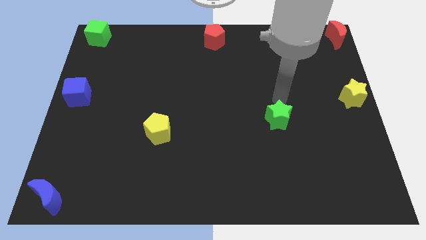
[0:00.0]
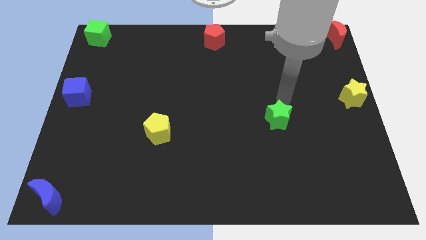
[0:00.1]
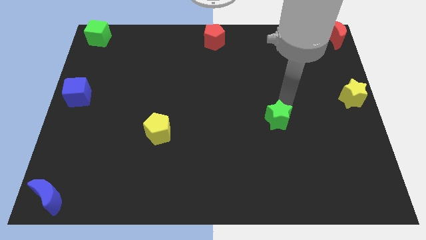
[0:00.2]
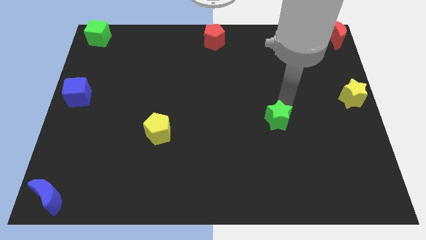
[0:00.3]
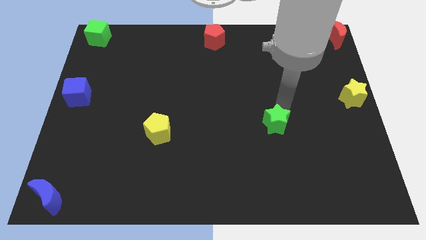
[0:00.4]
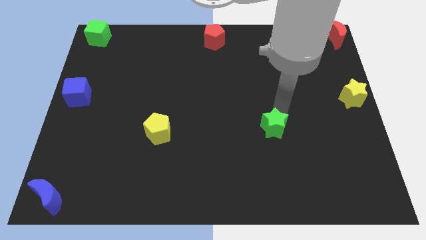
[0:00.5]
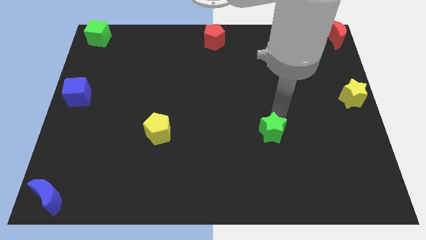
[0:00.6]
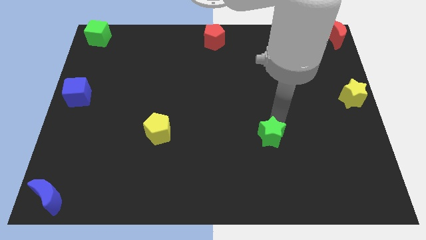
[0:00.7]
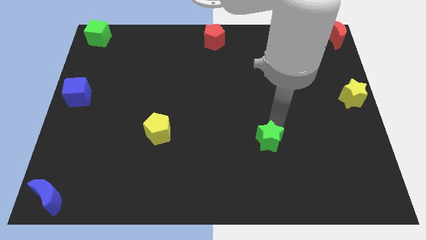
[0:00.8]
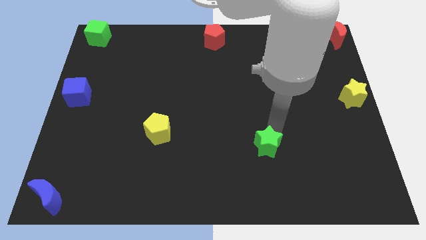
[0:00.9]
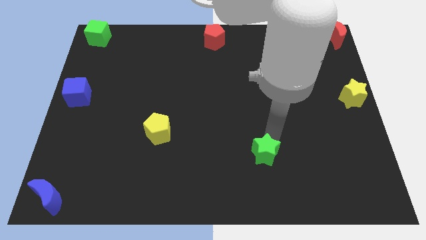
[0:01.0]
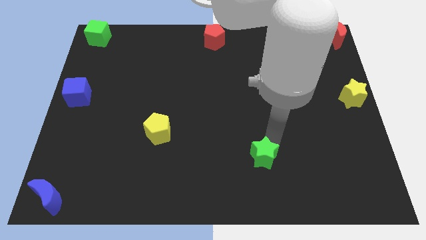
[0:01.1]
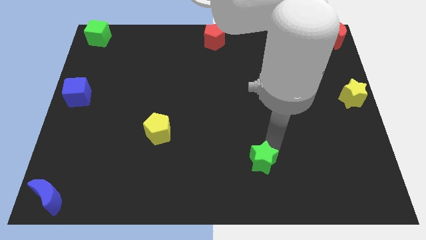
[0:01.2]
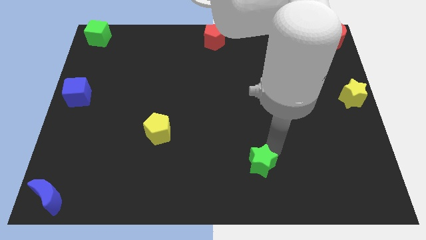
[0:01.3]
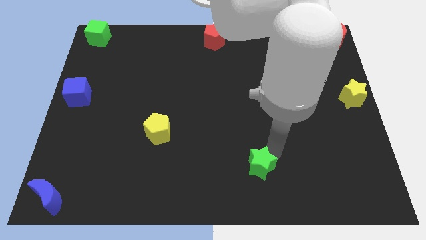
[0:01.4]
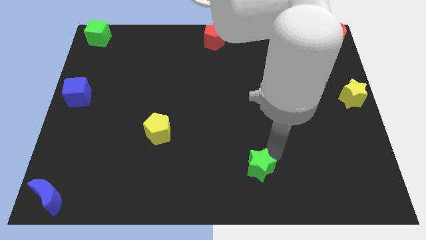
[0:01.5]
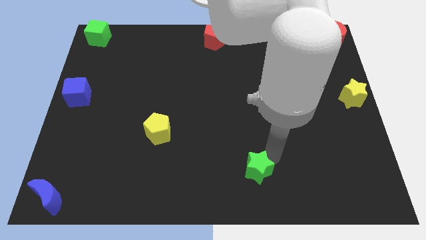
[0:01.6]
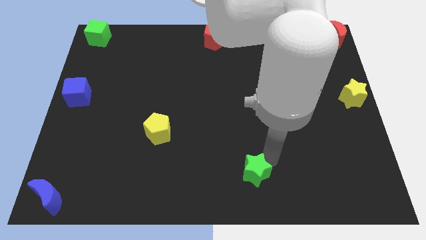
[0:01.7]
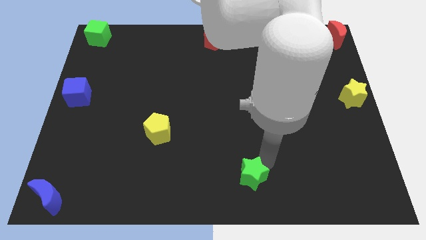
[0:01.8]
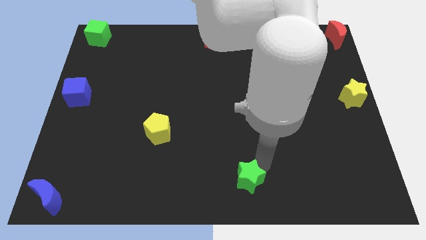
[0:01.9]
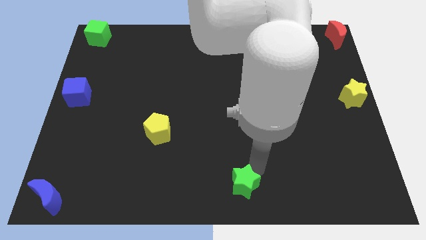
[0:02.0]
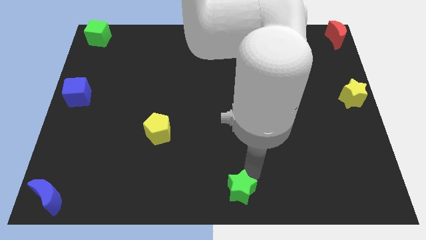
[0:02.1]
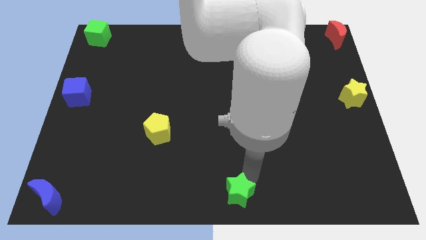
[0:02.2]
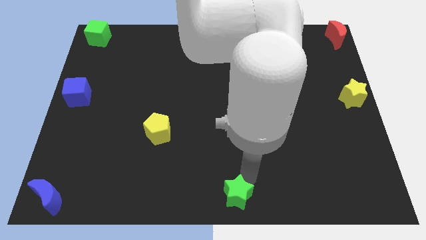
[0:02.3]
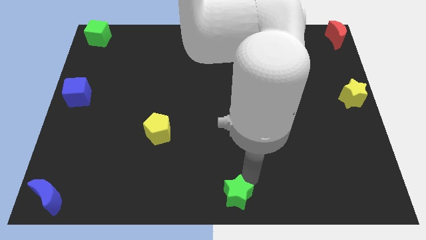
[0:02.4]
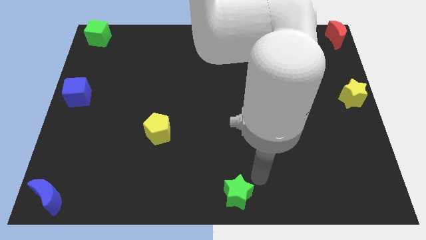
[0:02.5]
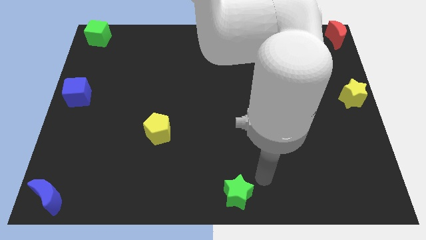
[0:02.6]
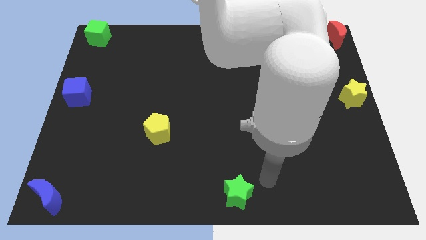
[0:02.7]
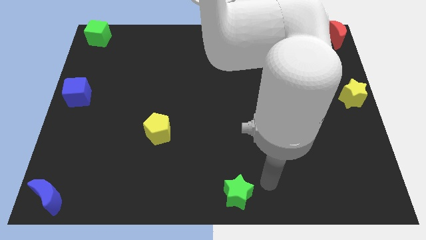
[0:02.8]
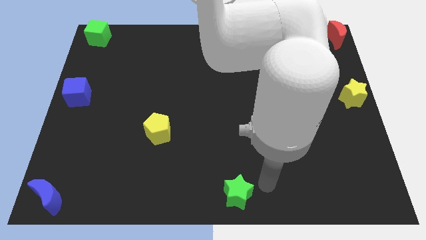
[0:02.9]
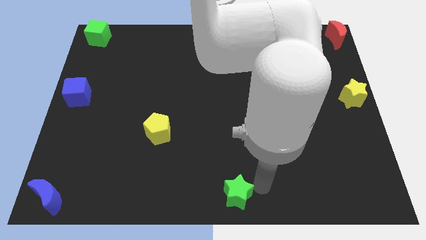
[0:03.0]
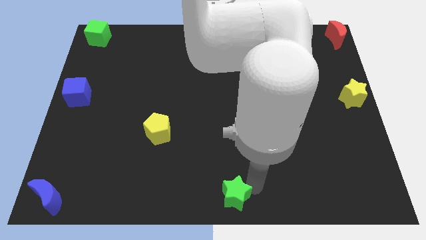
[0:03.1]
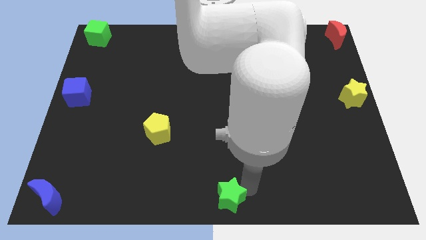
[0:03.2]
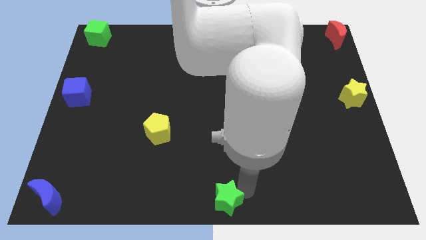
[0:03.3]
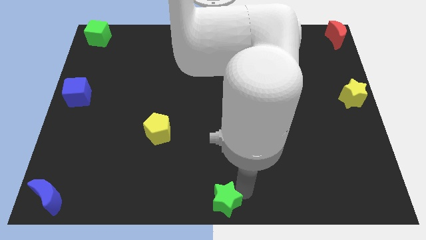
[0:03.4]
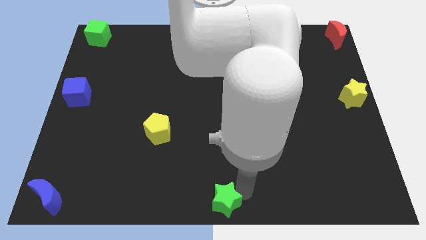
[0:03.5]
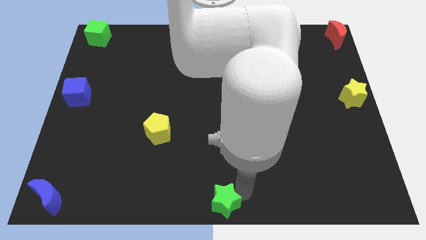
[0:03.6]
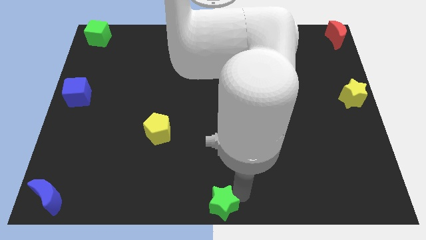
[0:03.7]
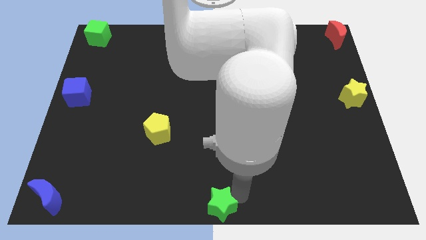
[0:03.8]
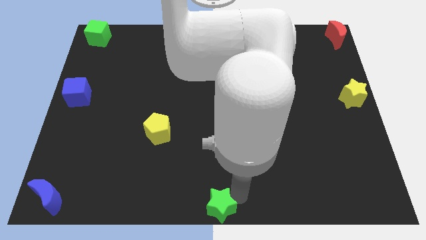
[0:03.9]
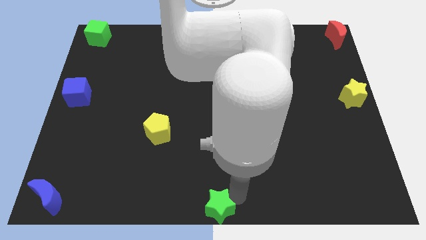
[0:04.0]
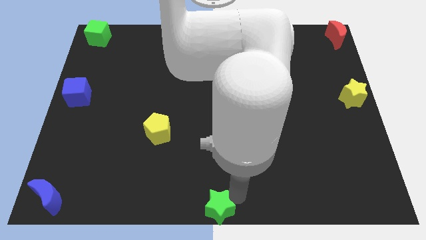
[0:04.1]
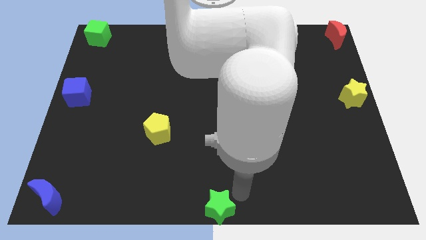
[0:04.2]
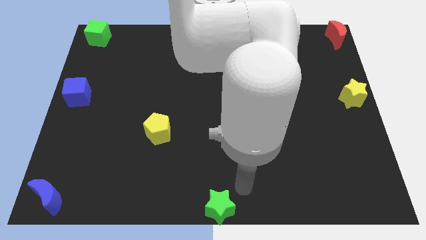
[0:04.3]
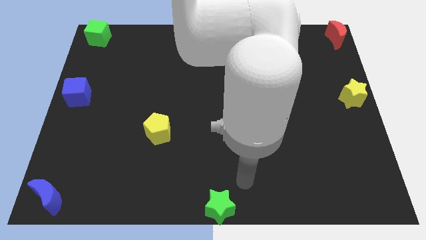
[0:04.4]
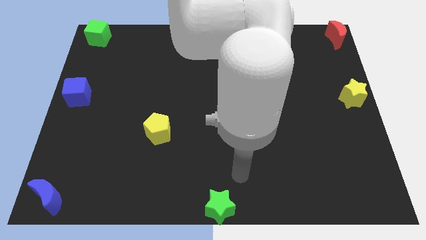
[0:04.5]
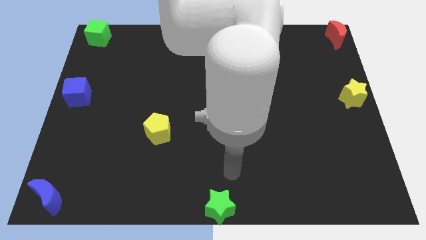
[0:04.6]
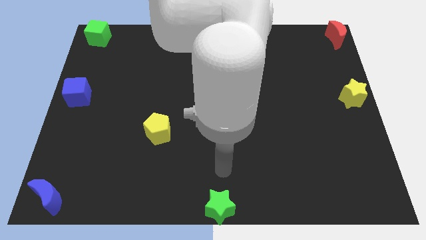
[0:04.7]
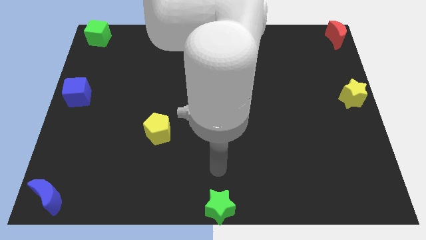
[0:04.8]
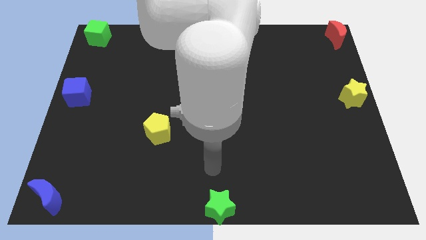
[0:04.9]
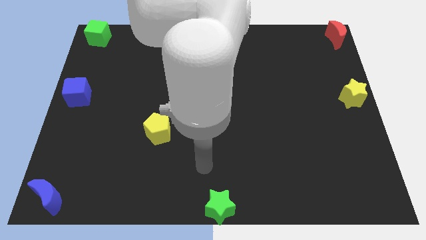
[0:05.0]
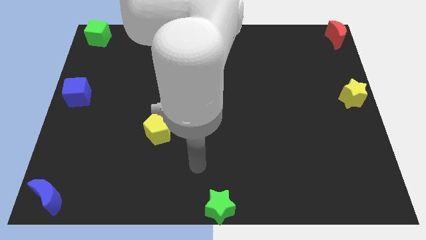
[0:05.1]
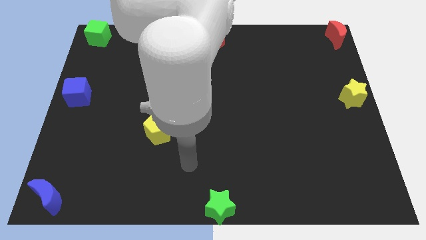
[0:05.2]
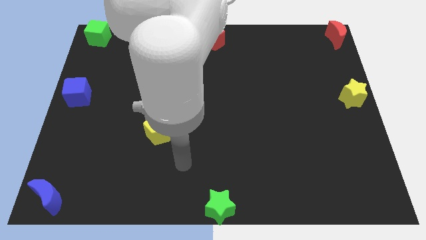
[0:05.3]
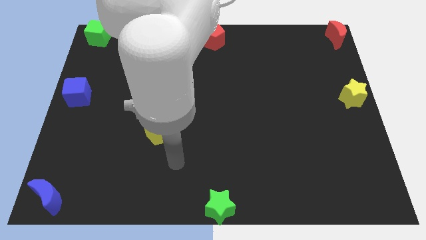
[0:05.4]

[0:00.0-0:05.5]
push the green star to the bottom center of the board

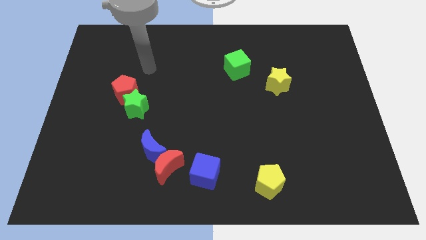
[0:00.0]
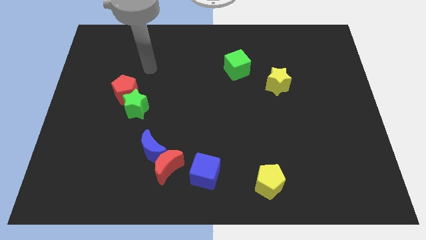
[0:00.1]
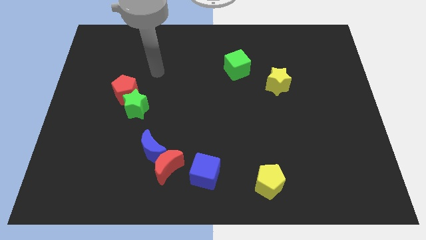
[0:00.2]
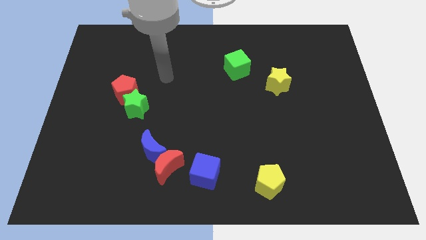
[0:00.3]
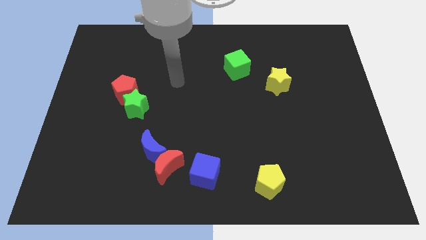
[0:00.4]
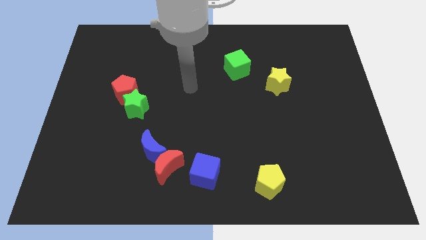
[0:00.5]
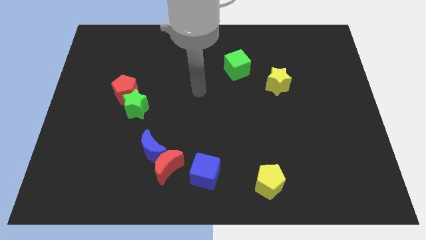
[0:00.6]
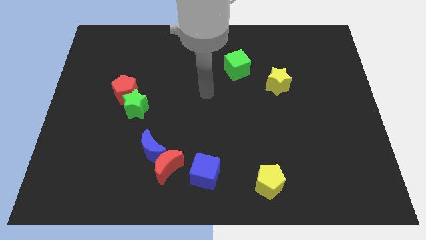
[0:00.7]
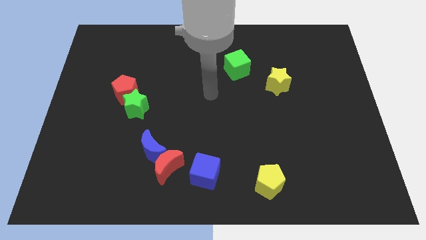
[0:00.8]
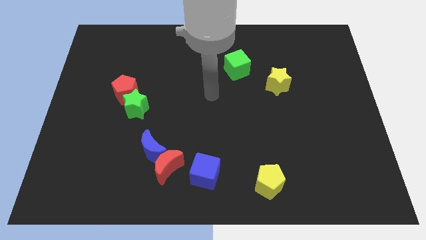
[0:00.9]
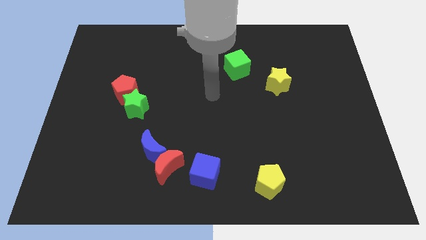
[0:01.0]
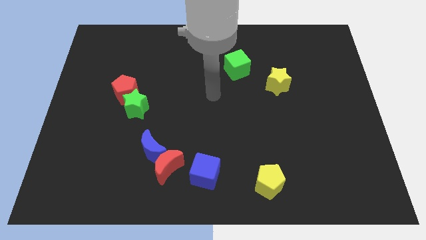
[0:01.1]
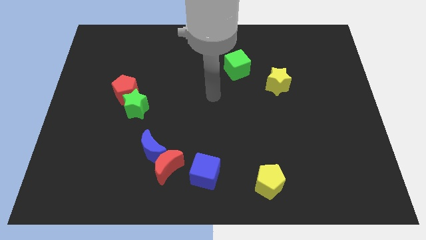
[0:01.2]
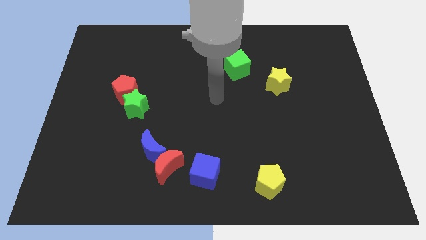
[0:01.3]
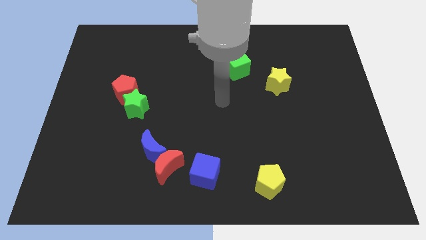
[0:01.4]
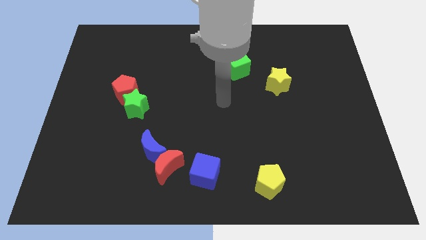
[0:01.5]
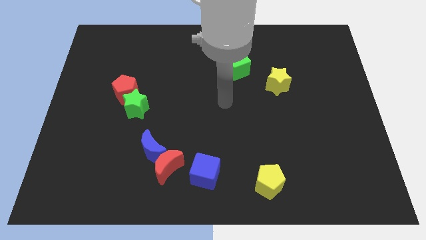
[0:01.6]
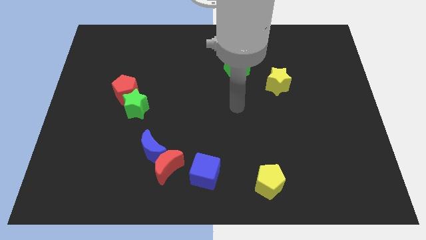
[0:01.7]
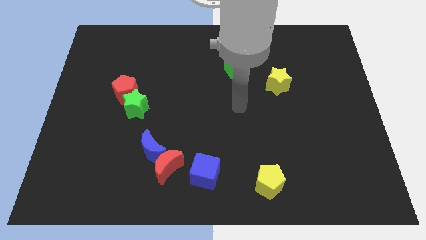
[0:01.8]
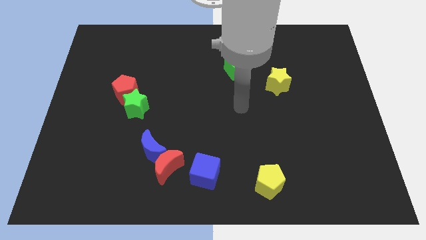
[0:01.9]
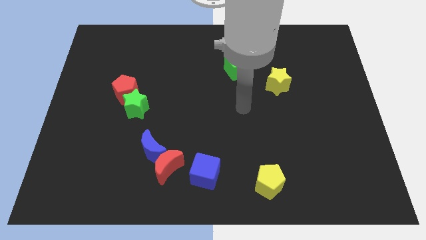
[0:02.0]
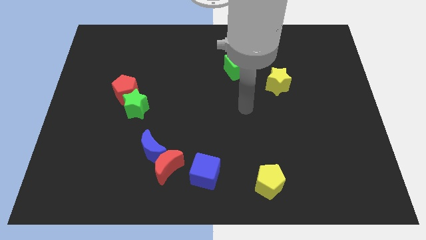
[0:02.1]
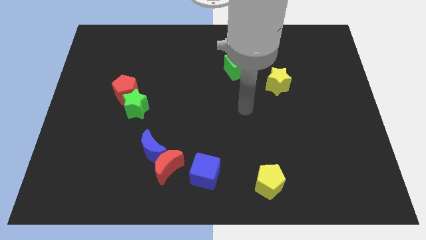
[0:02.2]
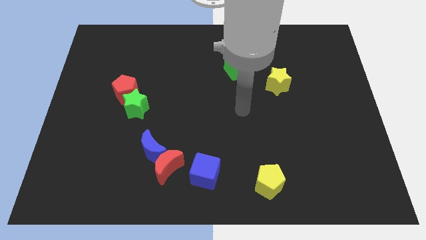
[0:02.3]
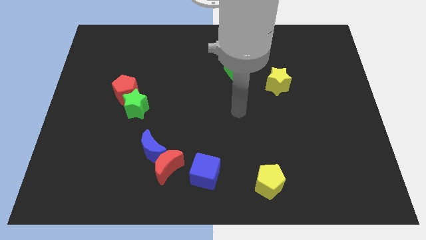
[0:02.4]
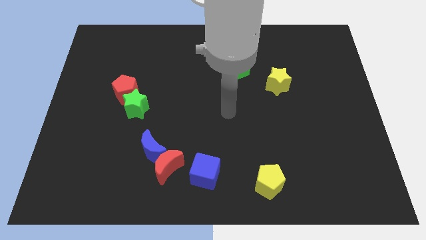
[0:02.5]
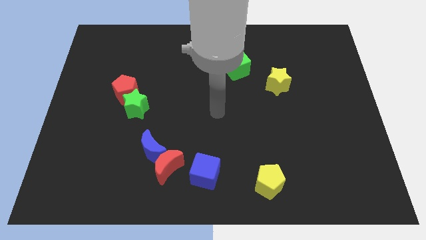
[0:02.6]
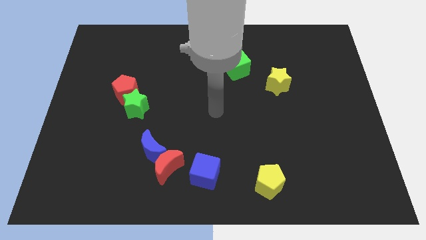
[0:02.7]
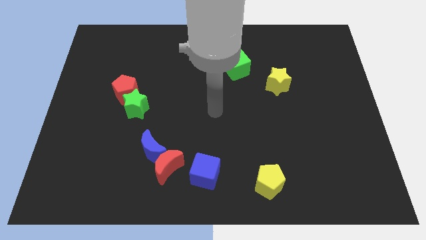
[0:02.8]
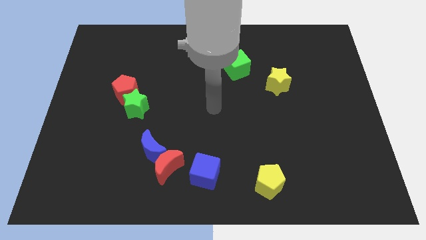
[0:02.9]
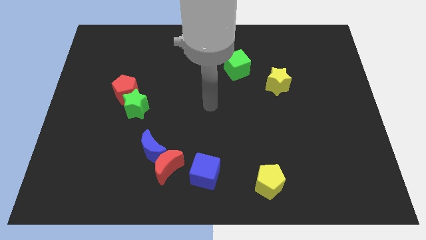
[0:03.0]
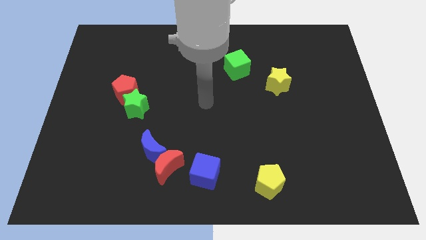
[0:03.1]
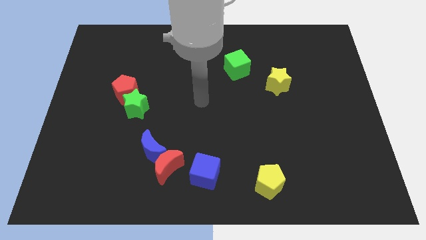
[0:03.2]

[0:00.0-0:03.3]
go and point your arm at the center of the board

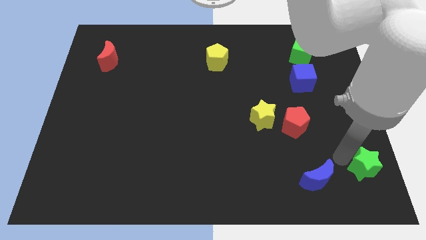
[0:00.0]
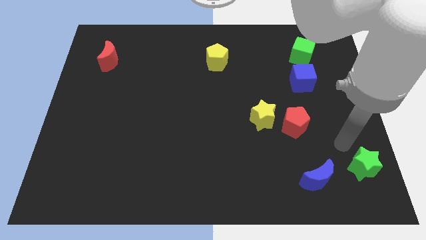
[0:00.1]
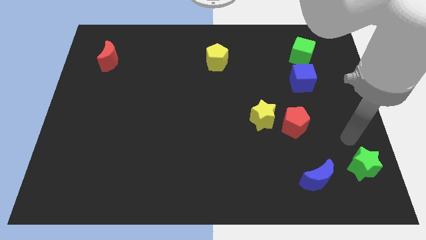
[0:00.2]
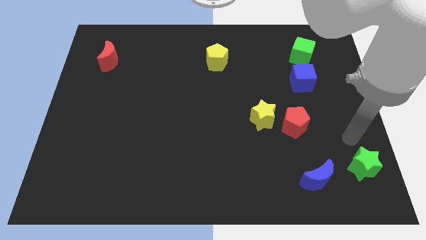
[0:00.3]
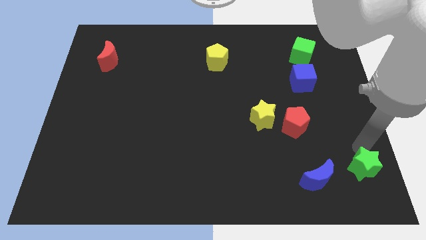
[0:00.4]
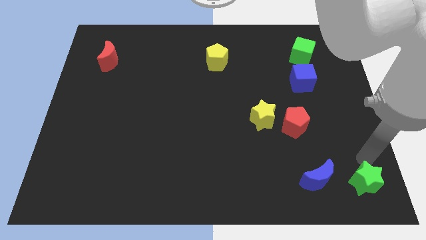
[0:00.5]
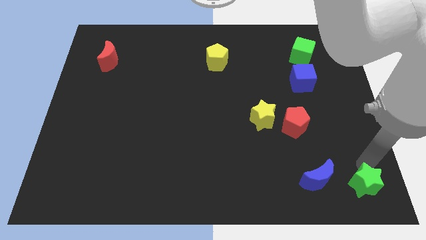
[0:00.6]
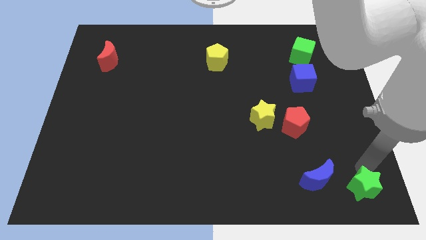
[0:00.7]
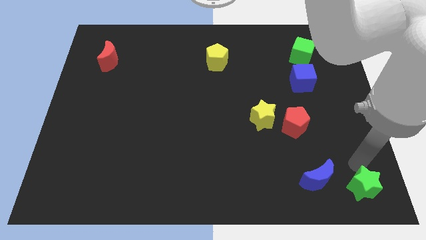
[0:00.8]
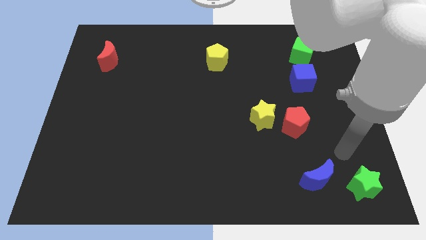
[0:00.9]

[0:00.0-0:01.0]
place the green star to the right side of blue moon
